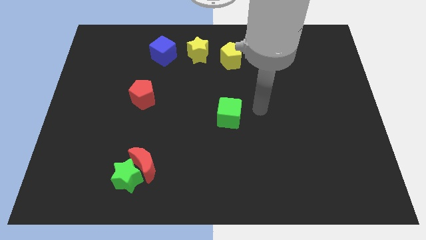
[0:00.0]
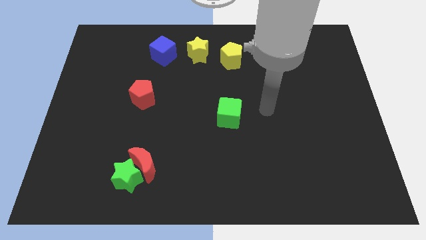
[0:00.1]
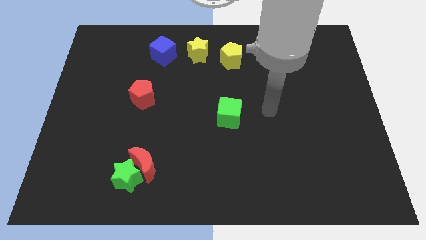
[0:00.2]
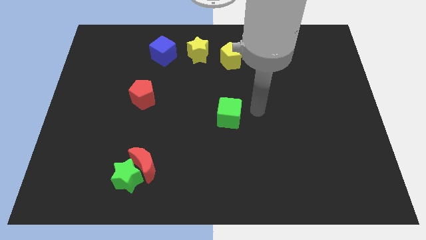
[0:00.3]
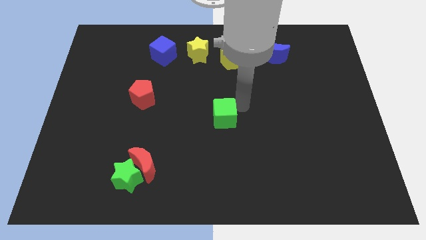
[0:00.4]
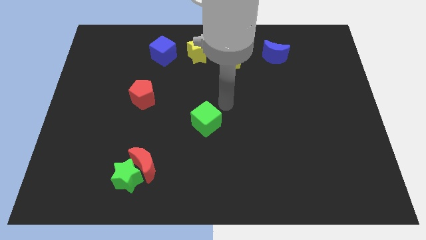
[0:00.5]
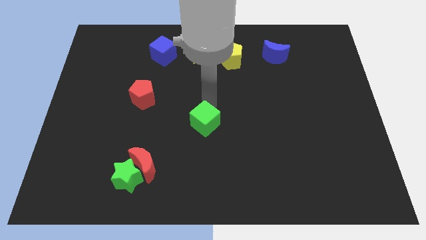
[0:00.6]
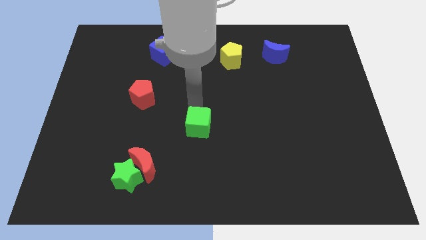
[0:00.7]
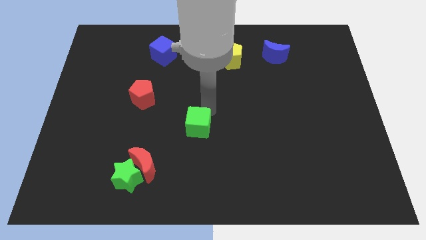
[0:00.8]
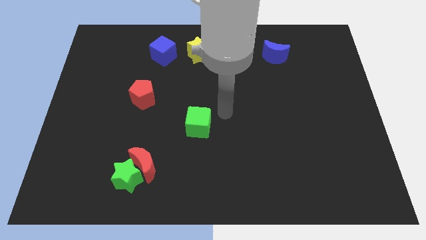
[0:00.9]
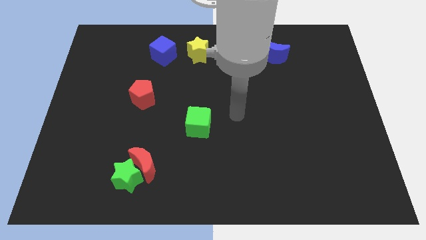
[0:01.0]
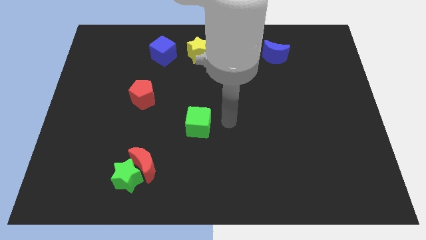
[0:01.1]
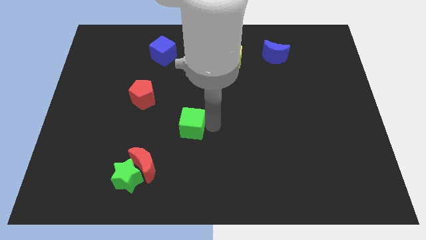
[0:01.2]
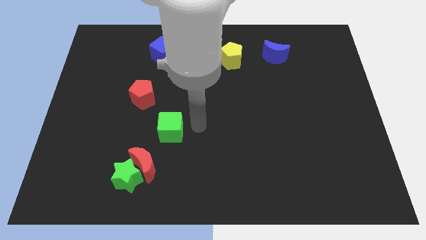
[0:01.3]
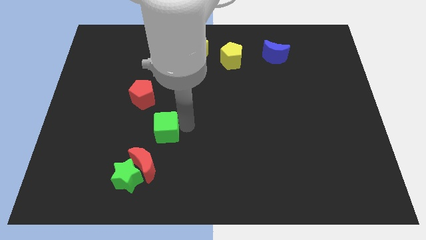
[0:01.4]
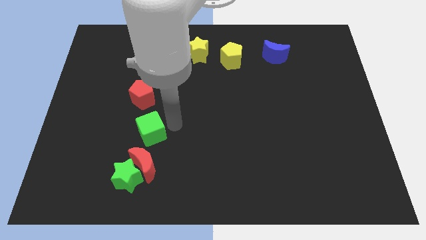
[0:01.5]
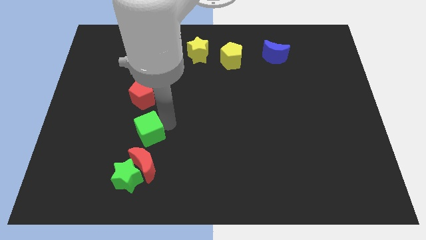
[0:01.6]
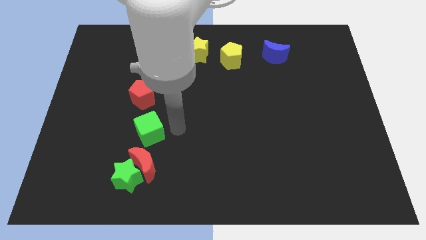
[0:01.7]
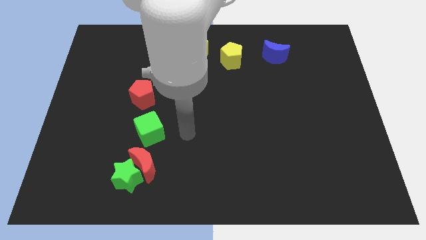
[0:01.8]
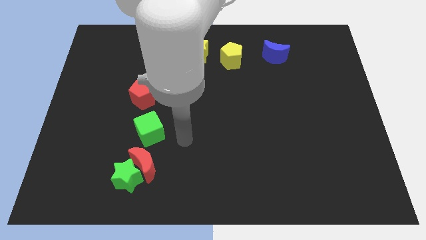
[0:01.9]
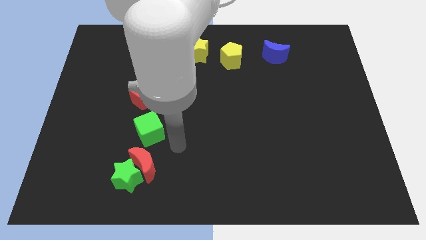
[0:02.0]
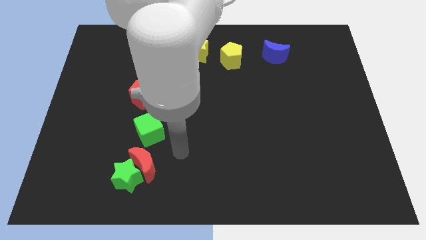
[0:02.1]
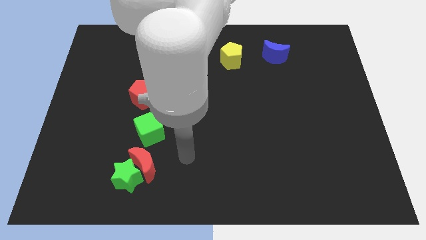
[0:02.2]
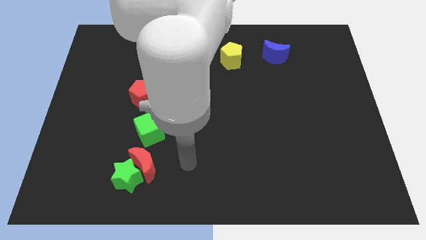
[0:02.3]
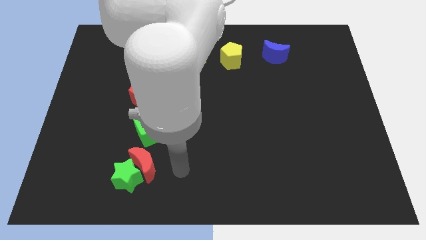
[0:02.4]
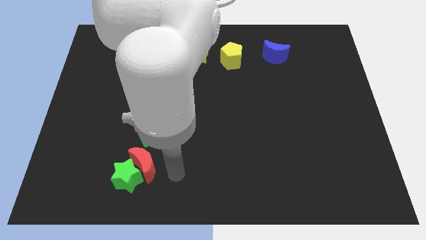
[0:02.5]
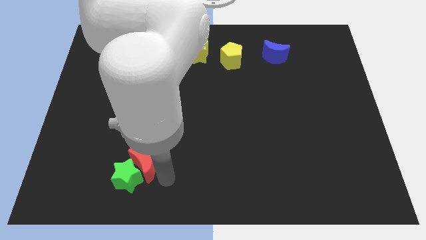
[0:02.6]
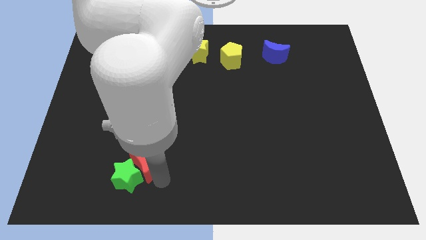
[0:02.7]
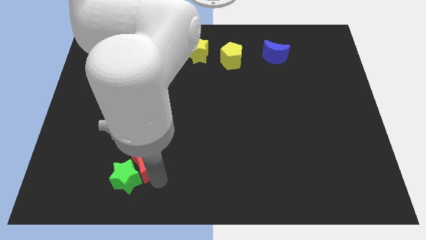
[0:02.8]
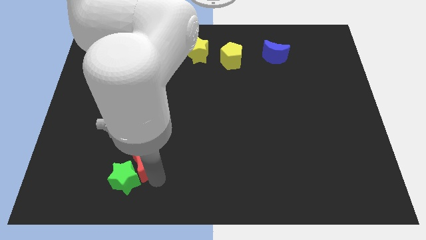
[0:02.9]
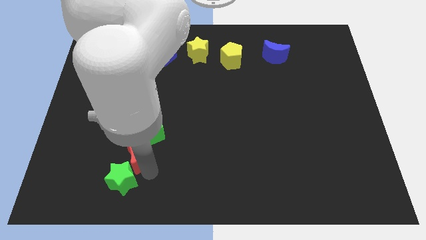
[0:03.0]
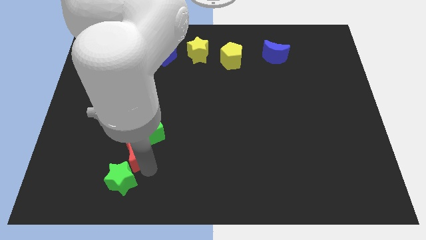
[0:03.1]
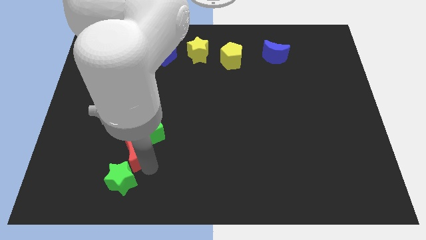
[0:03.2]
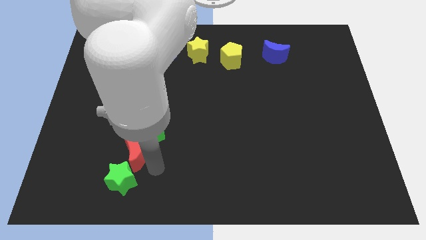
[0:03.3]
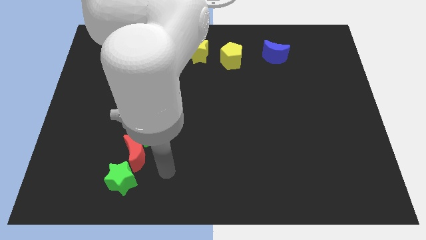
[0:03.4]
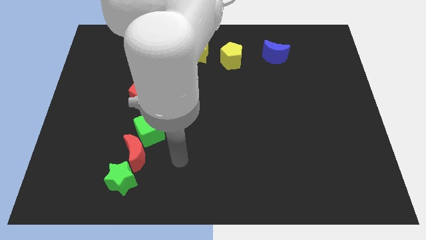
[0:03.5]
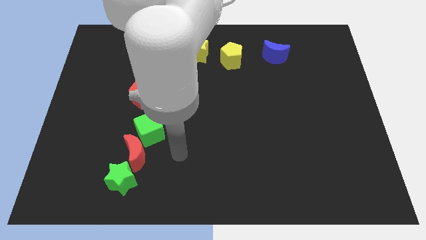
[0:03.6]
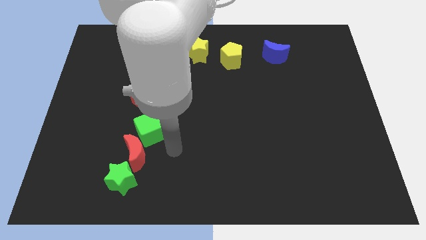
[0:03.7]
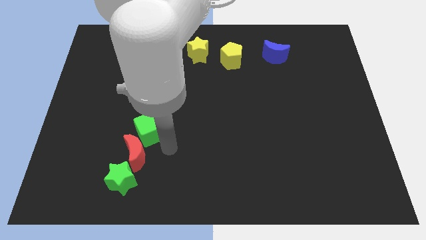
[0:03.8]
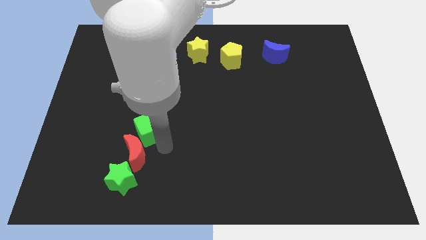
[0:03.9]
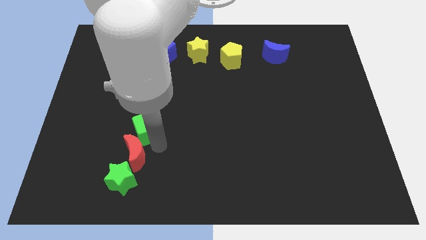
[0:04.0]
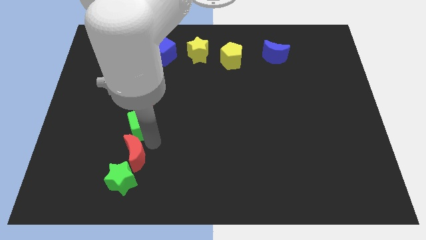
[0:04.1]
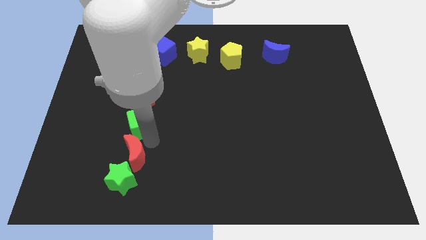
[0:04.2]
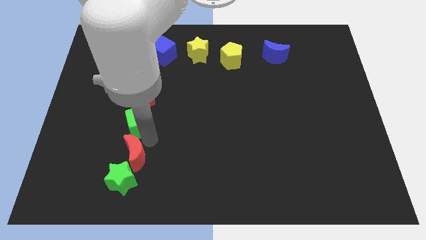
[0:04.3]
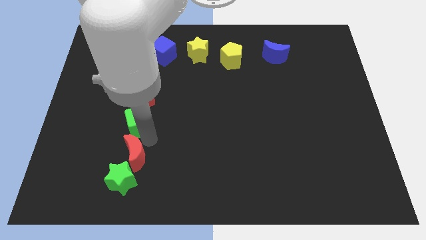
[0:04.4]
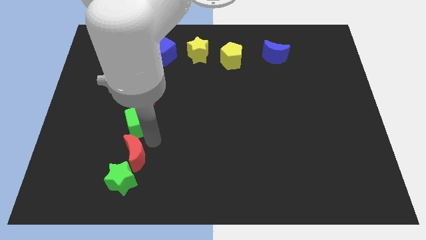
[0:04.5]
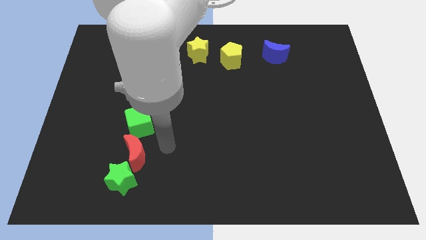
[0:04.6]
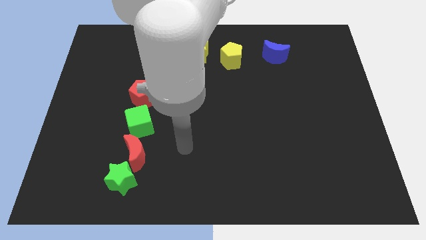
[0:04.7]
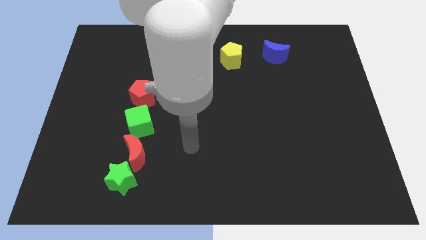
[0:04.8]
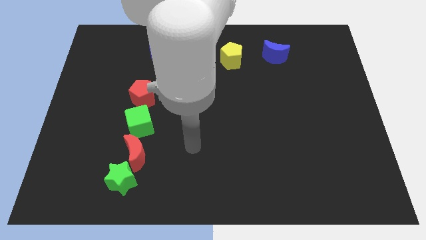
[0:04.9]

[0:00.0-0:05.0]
place the red crescent to bottom of green cube

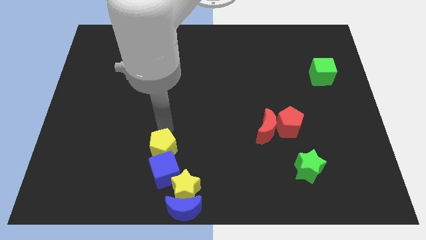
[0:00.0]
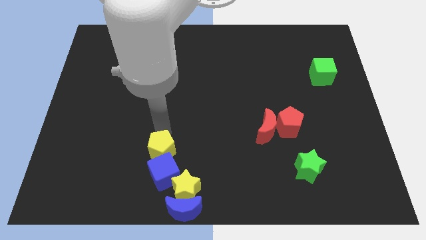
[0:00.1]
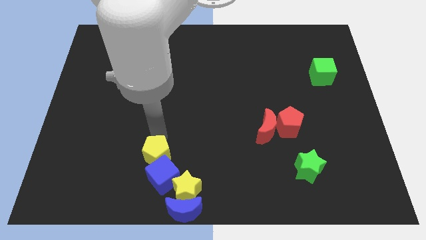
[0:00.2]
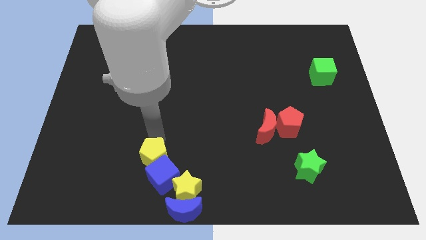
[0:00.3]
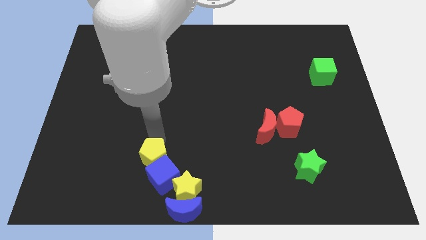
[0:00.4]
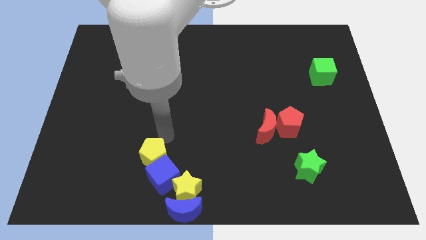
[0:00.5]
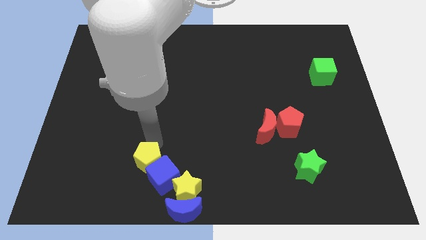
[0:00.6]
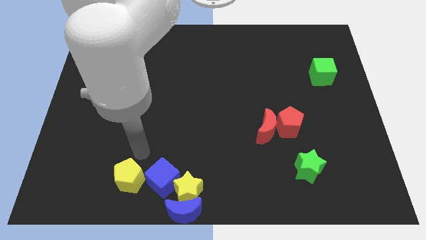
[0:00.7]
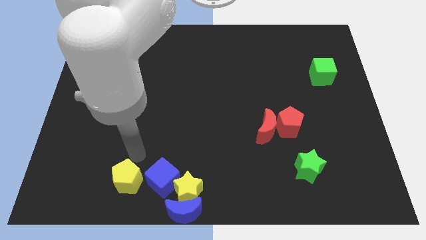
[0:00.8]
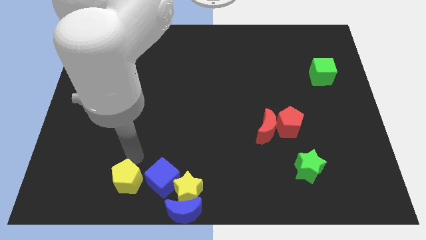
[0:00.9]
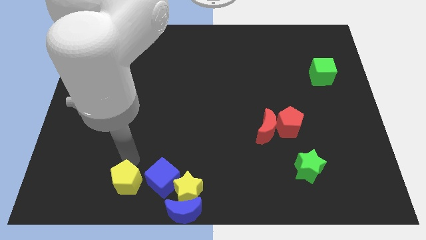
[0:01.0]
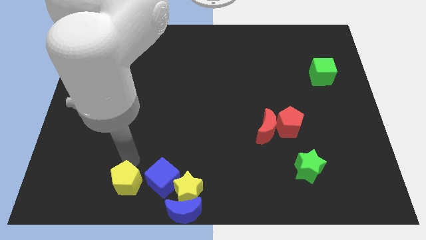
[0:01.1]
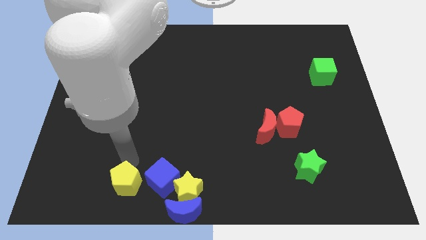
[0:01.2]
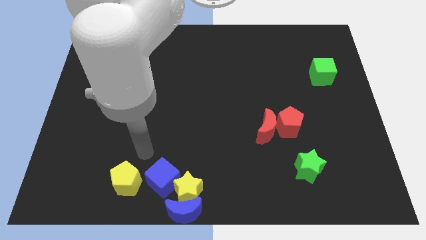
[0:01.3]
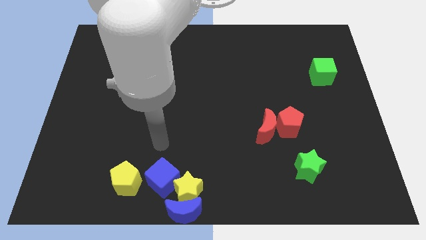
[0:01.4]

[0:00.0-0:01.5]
place the yellow pentagon left to the blue cube

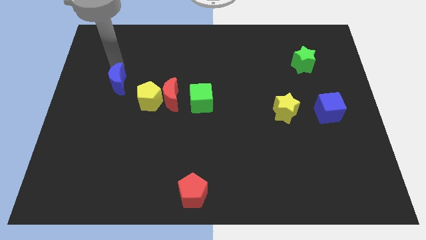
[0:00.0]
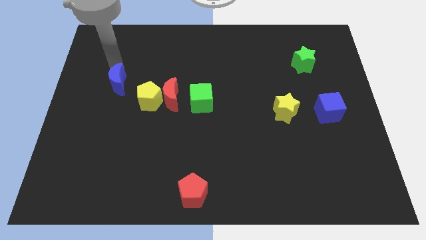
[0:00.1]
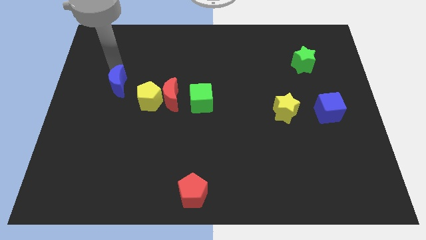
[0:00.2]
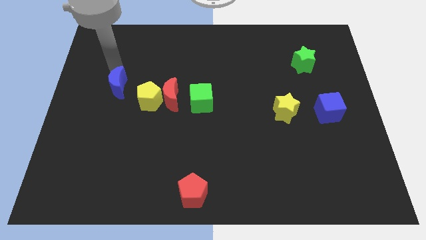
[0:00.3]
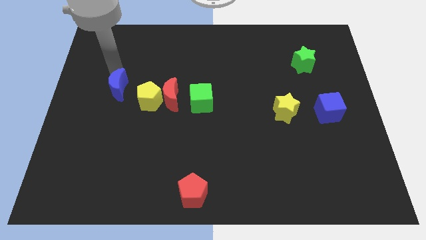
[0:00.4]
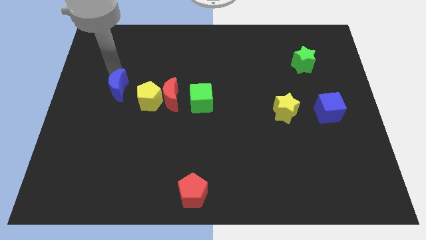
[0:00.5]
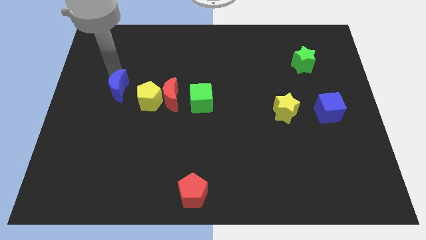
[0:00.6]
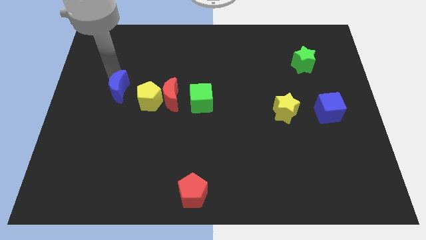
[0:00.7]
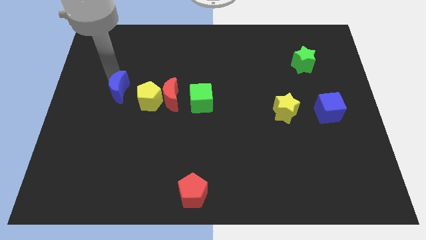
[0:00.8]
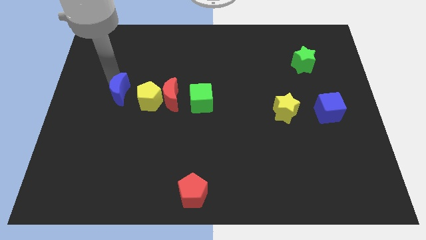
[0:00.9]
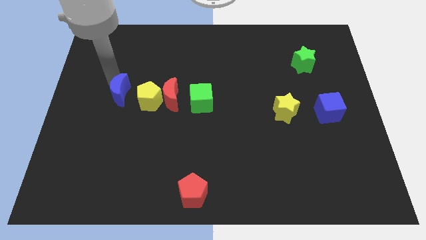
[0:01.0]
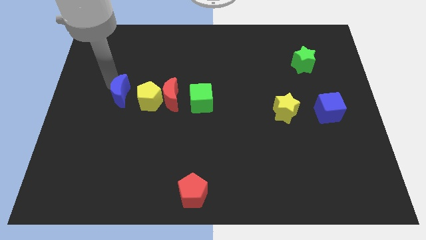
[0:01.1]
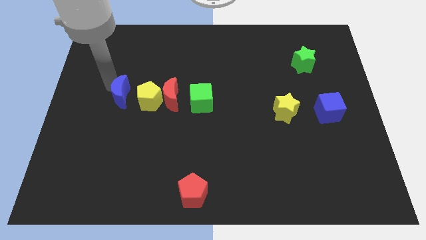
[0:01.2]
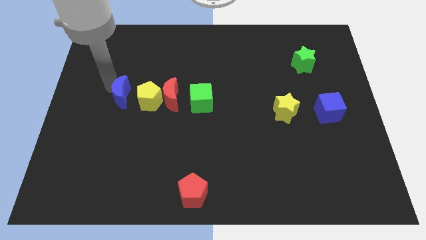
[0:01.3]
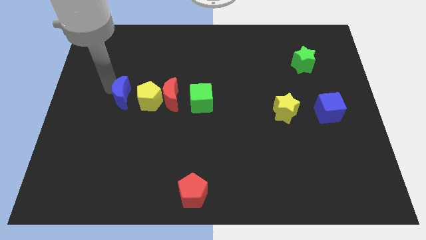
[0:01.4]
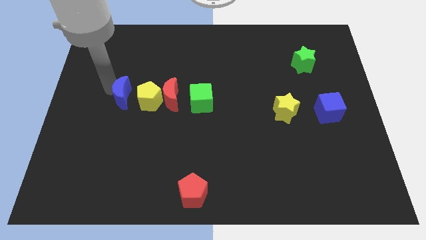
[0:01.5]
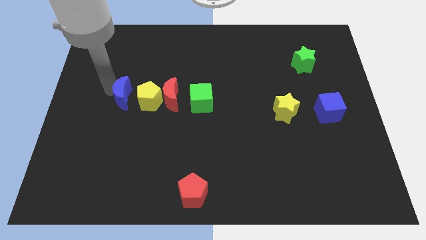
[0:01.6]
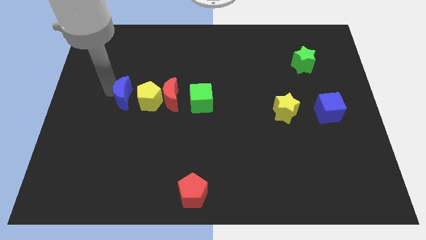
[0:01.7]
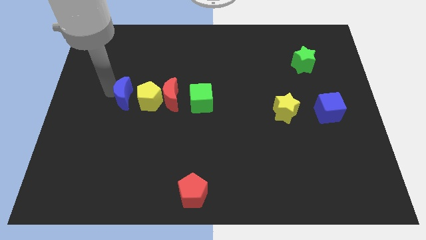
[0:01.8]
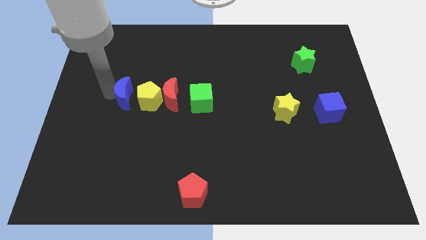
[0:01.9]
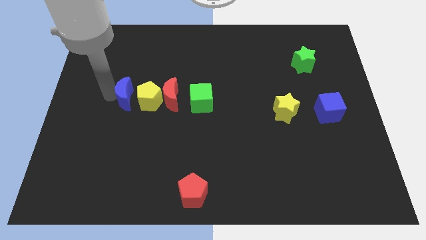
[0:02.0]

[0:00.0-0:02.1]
place the blue crescent to the left of yellow pentagon

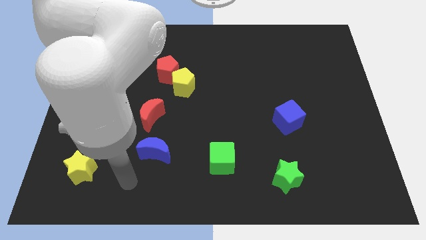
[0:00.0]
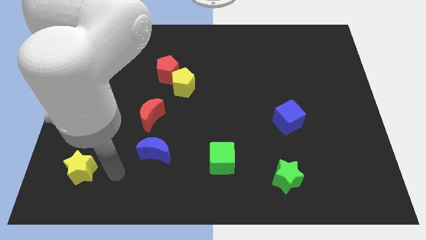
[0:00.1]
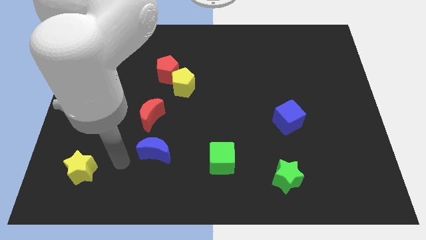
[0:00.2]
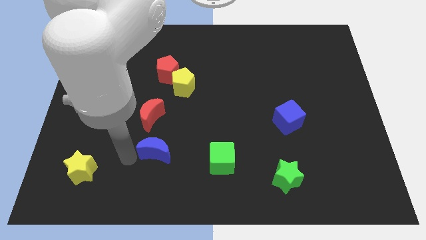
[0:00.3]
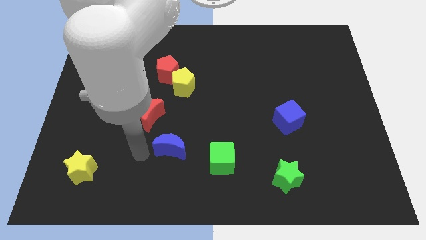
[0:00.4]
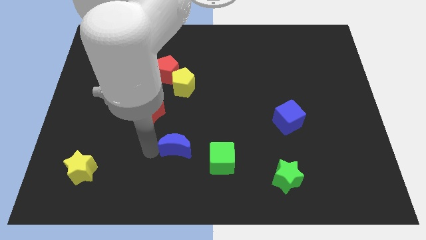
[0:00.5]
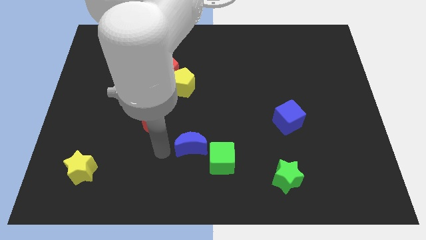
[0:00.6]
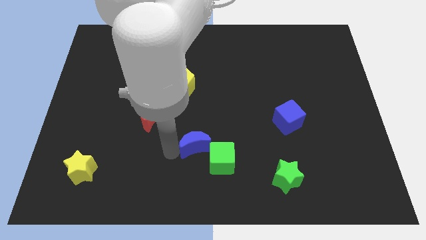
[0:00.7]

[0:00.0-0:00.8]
put the blue moon at the top left side of green cube
